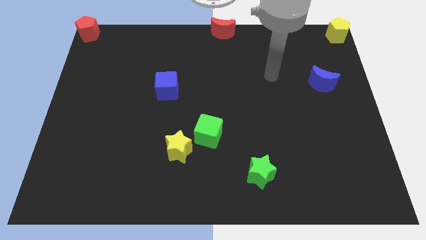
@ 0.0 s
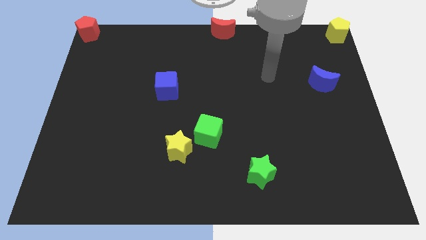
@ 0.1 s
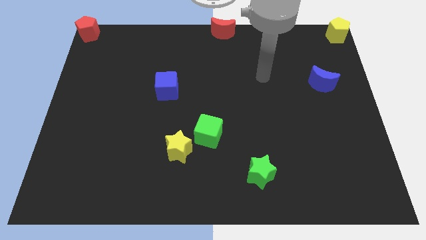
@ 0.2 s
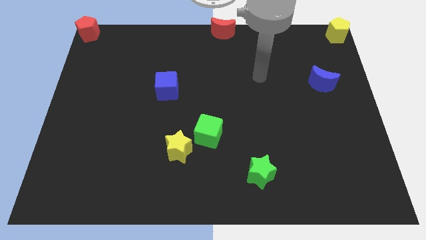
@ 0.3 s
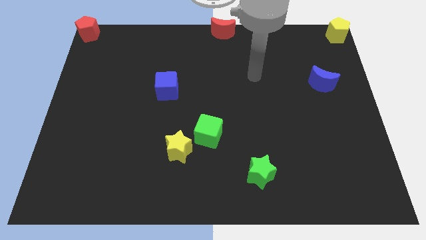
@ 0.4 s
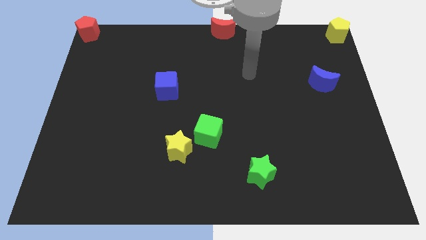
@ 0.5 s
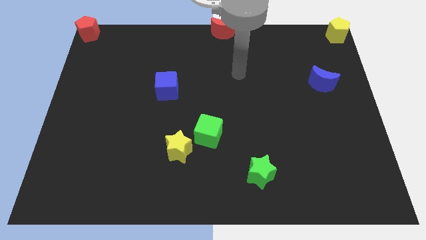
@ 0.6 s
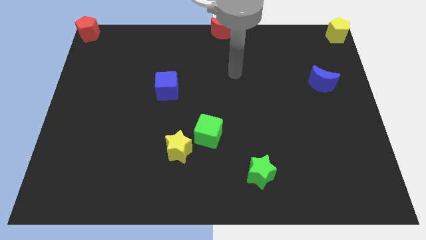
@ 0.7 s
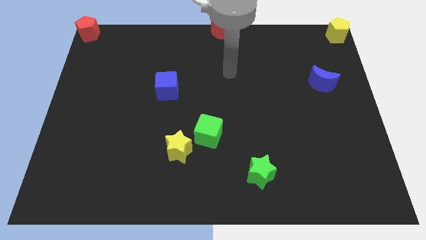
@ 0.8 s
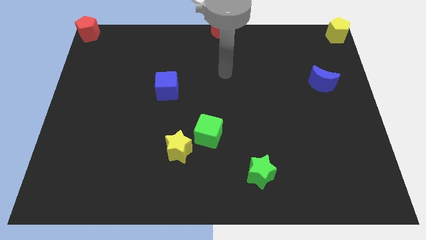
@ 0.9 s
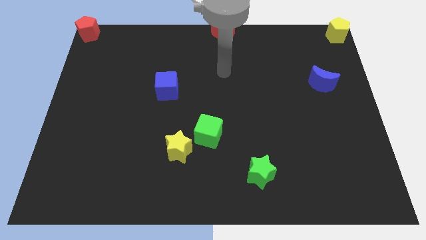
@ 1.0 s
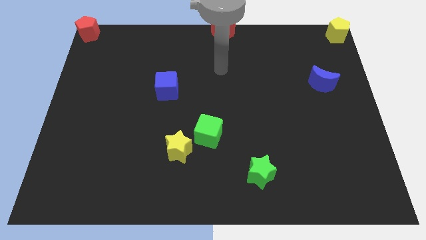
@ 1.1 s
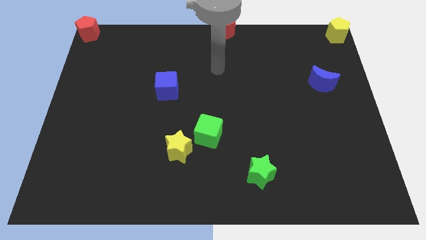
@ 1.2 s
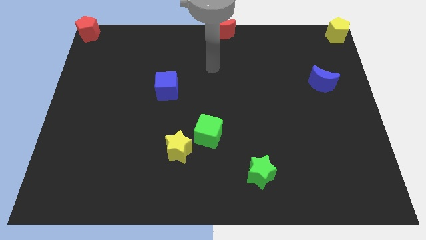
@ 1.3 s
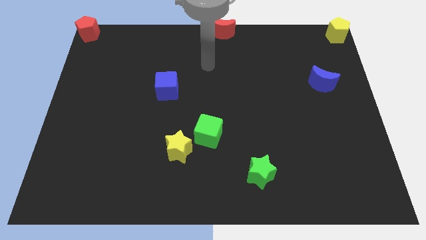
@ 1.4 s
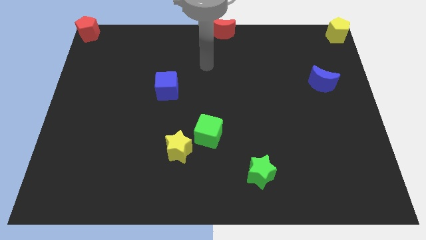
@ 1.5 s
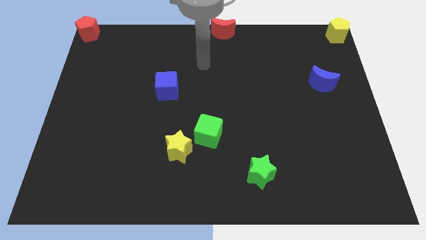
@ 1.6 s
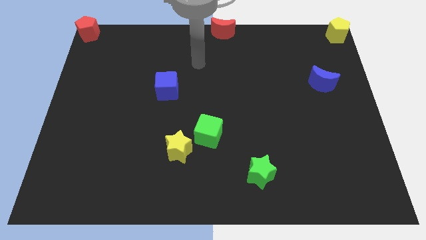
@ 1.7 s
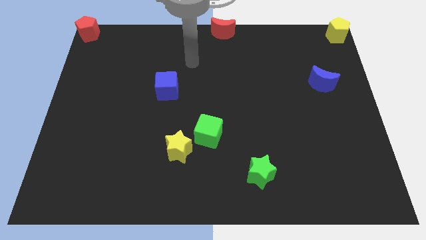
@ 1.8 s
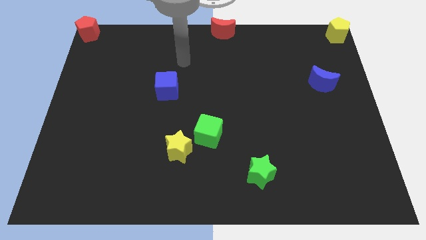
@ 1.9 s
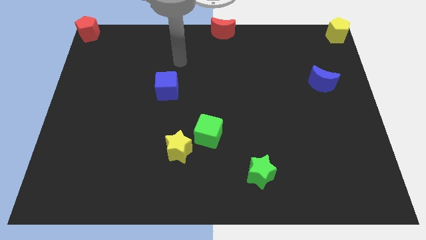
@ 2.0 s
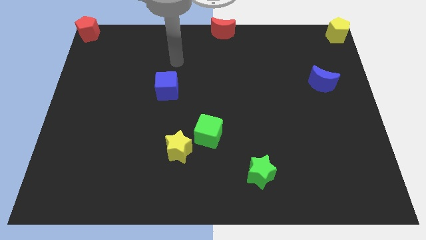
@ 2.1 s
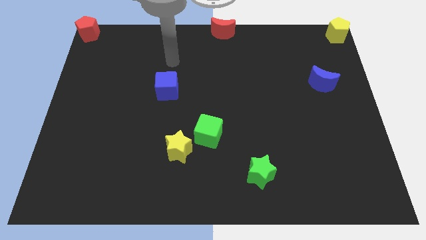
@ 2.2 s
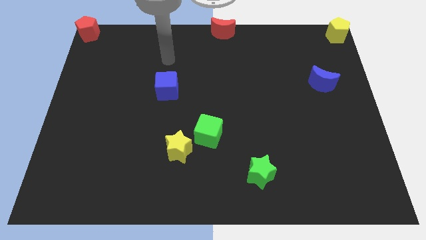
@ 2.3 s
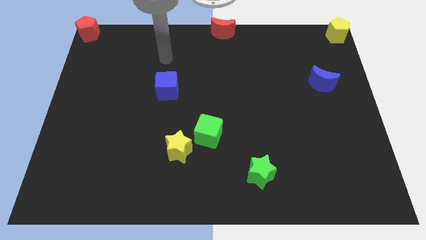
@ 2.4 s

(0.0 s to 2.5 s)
move your arm to the top of the blue cube

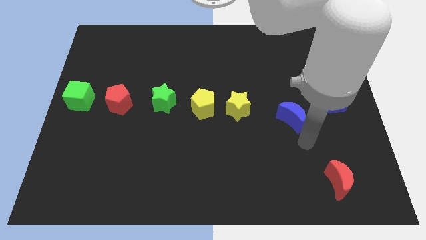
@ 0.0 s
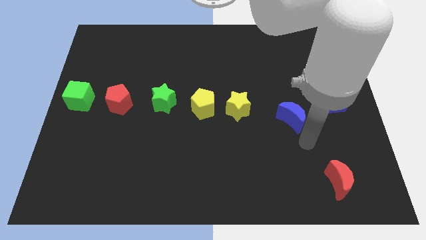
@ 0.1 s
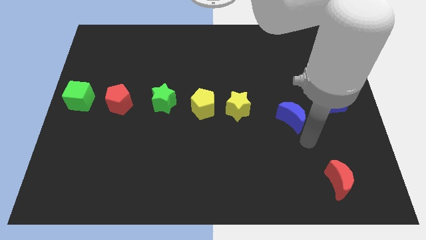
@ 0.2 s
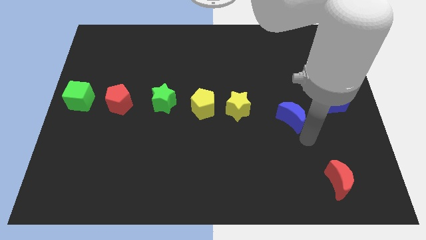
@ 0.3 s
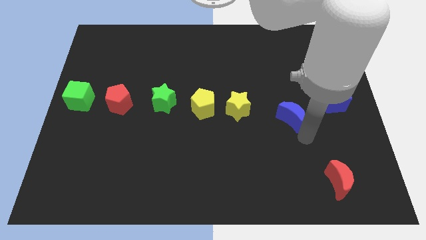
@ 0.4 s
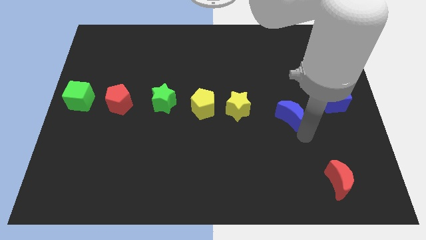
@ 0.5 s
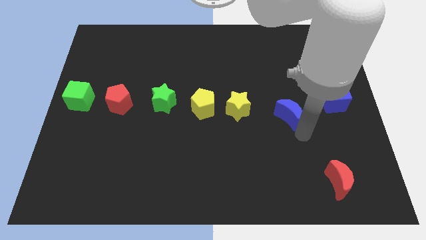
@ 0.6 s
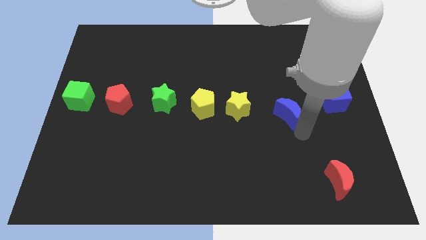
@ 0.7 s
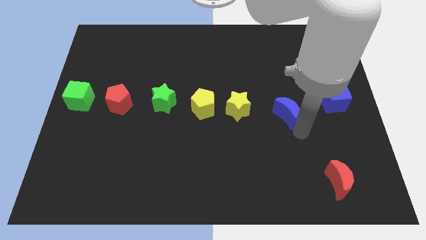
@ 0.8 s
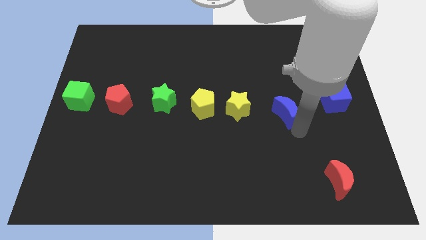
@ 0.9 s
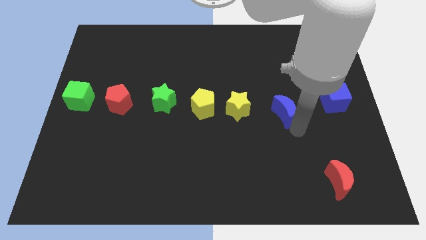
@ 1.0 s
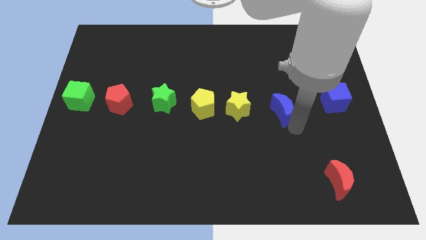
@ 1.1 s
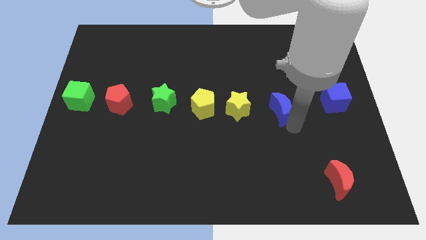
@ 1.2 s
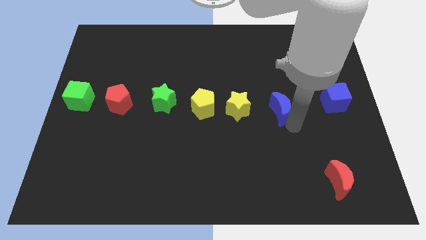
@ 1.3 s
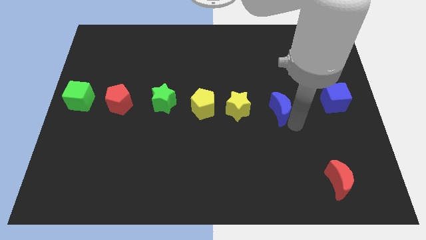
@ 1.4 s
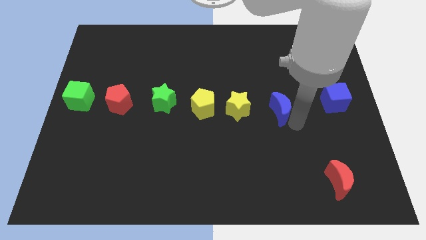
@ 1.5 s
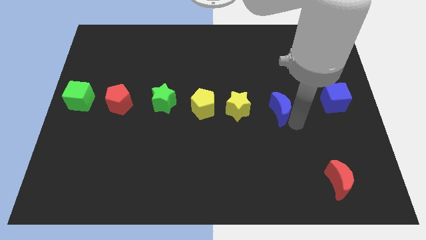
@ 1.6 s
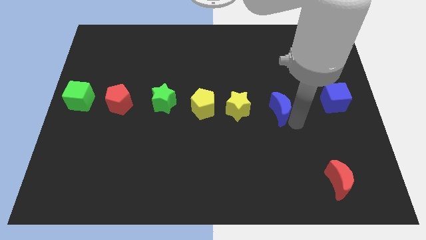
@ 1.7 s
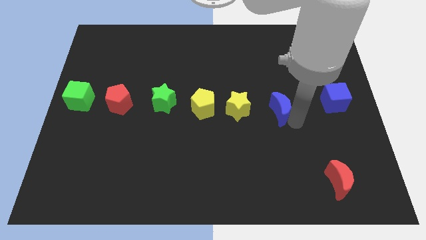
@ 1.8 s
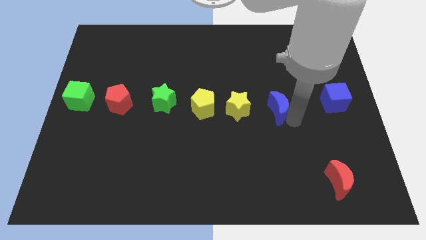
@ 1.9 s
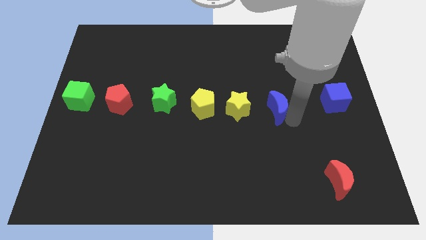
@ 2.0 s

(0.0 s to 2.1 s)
move the blue moon right beside the yellow star

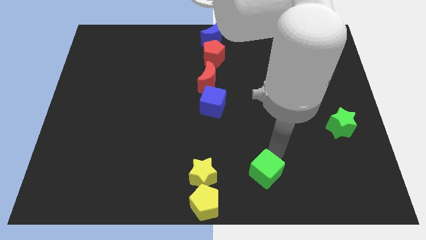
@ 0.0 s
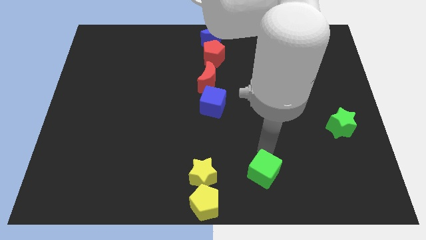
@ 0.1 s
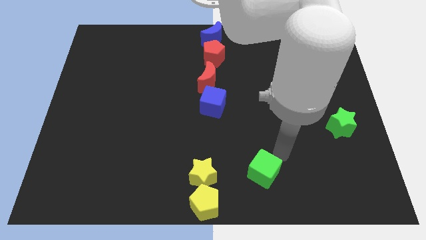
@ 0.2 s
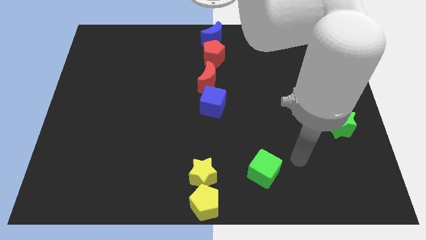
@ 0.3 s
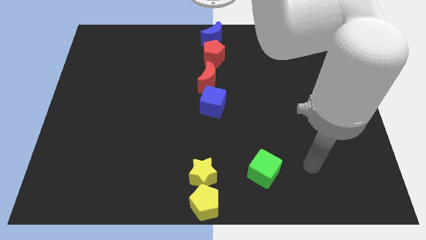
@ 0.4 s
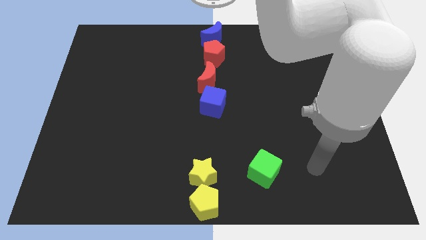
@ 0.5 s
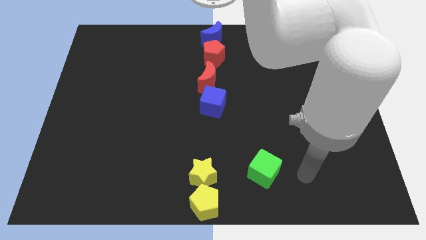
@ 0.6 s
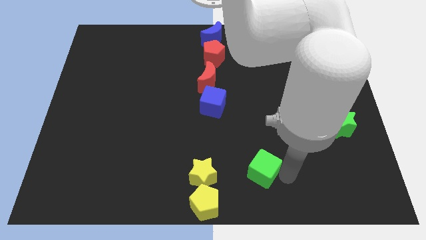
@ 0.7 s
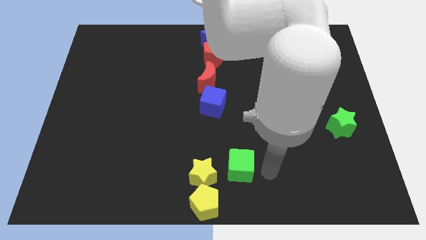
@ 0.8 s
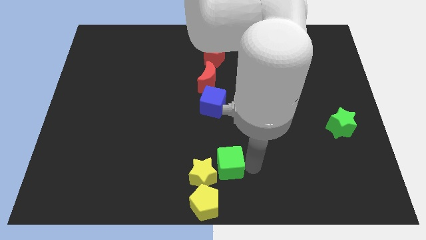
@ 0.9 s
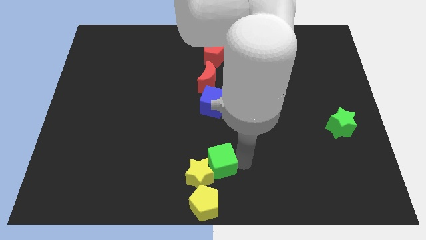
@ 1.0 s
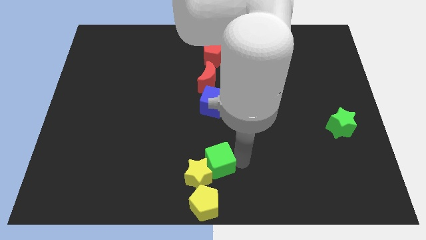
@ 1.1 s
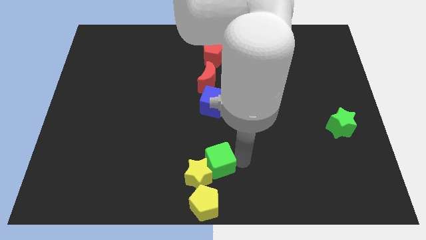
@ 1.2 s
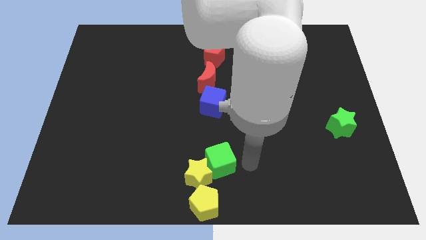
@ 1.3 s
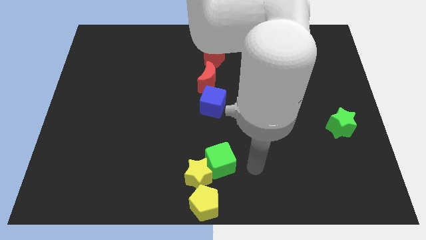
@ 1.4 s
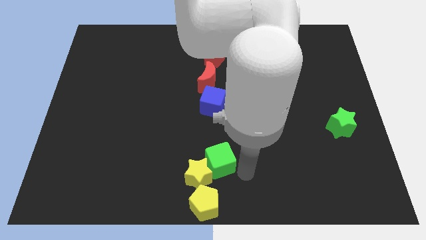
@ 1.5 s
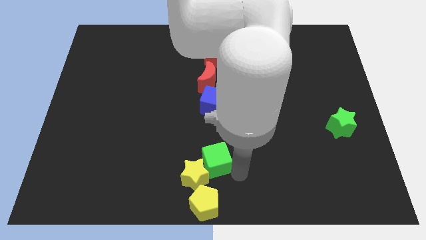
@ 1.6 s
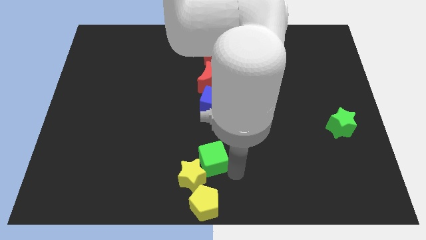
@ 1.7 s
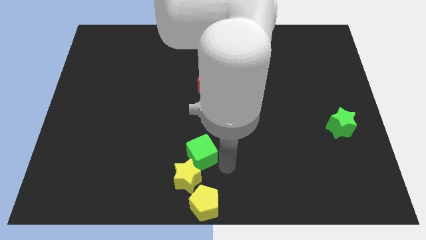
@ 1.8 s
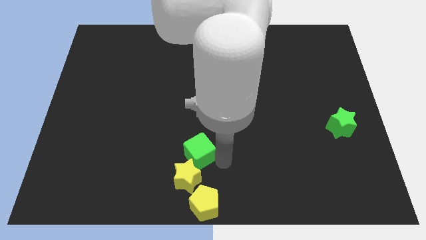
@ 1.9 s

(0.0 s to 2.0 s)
push the green cube into the yellow star

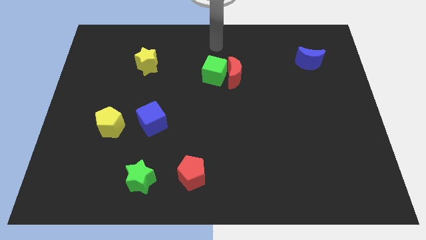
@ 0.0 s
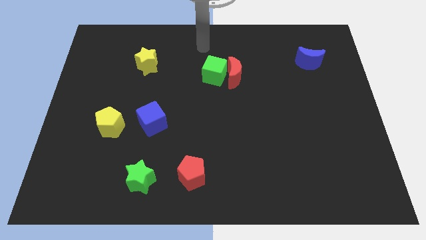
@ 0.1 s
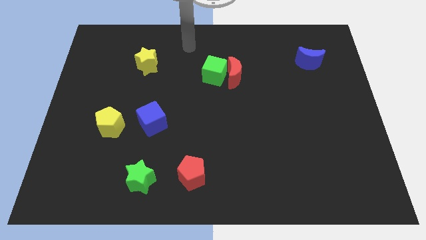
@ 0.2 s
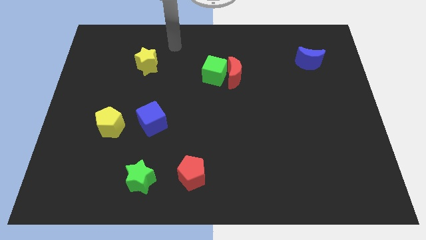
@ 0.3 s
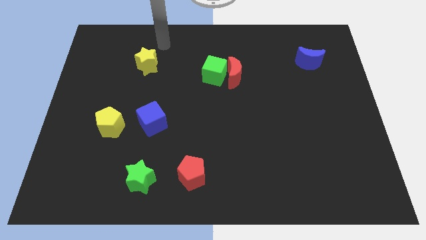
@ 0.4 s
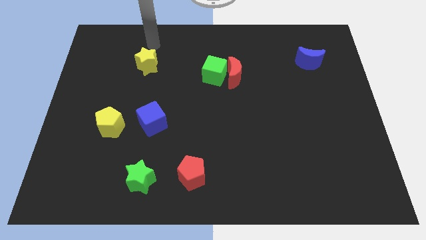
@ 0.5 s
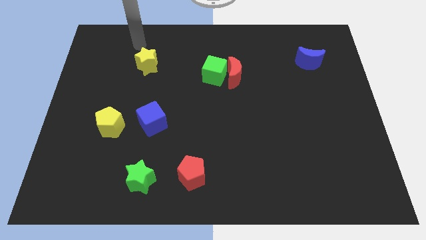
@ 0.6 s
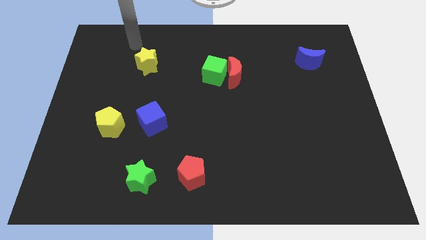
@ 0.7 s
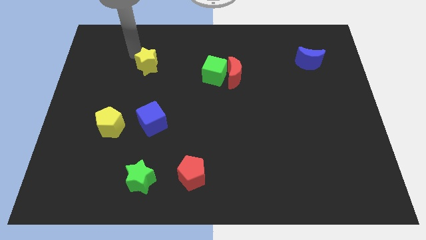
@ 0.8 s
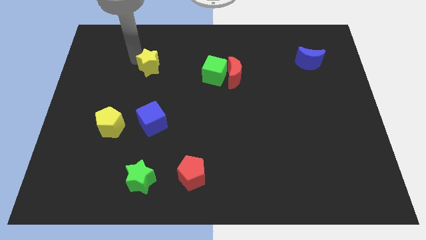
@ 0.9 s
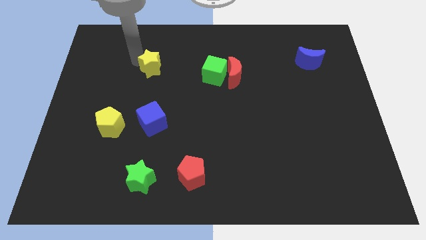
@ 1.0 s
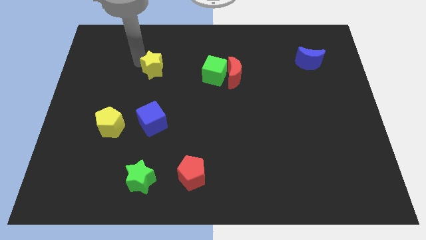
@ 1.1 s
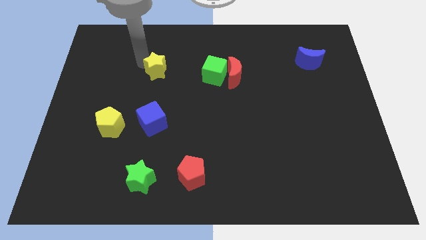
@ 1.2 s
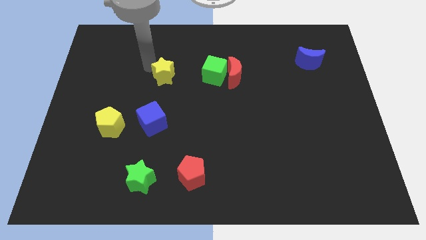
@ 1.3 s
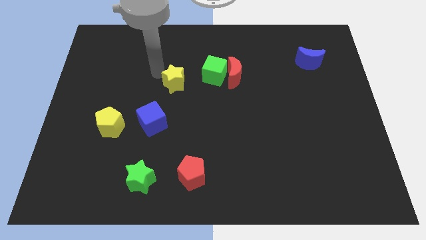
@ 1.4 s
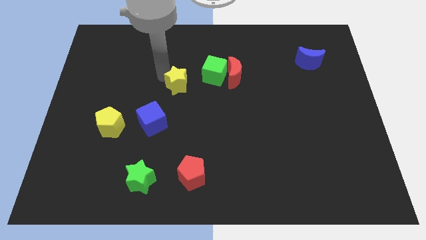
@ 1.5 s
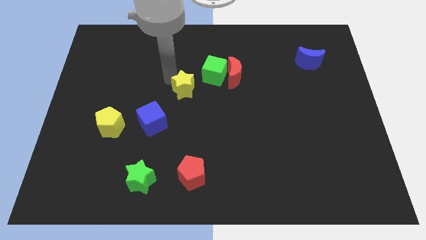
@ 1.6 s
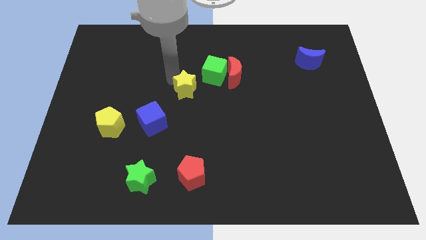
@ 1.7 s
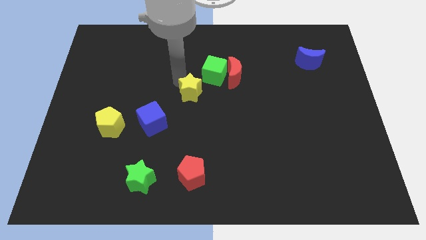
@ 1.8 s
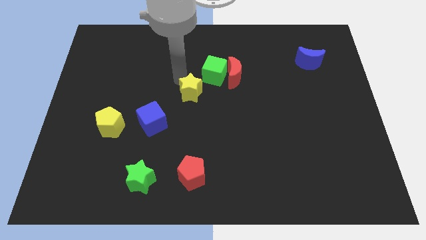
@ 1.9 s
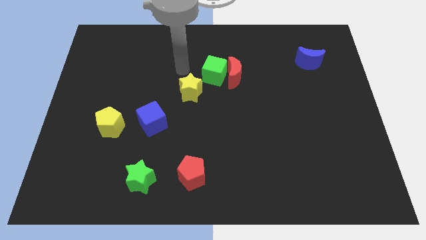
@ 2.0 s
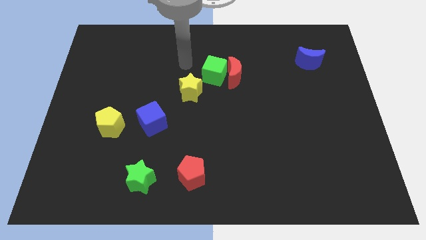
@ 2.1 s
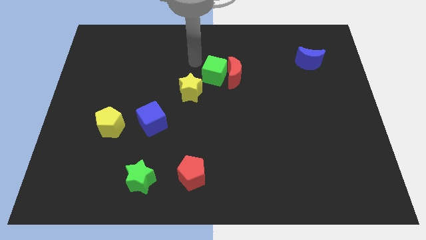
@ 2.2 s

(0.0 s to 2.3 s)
move yellow star towards center
